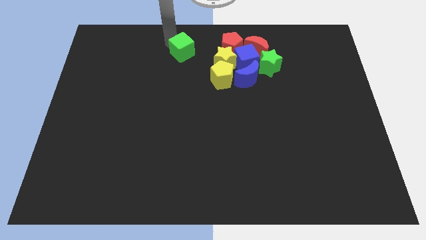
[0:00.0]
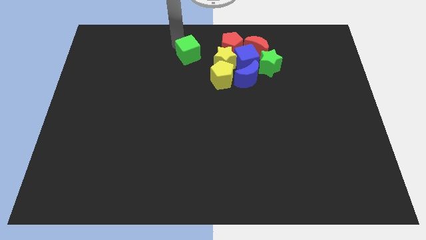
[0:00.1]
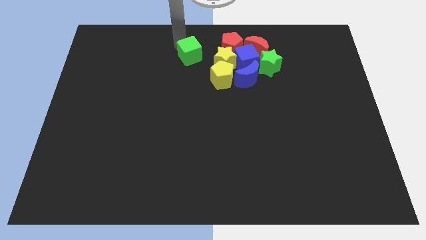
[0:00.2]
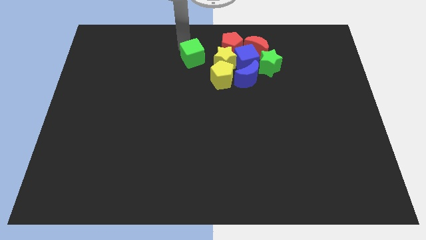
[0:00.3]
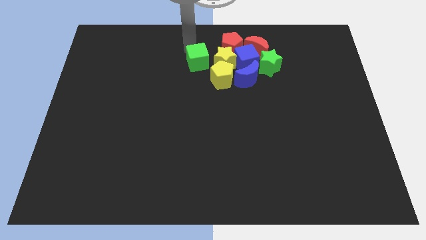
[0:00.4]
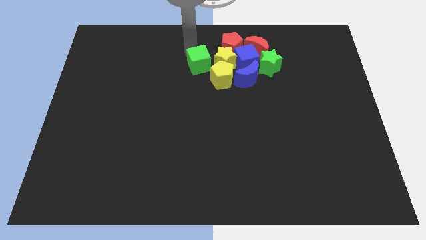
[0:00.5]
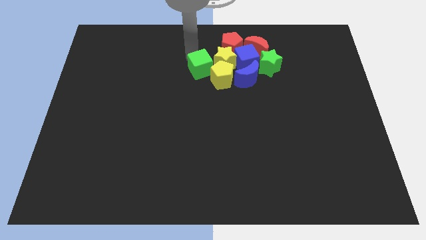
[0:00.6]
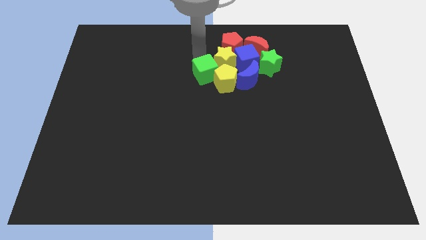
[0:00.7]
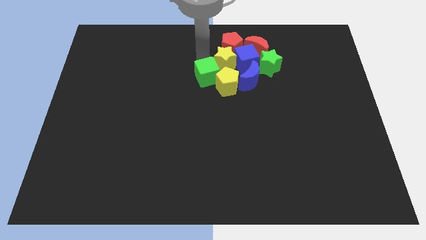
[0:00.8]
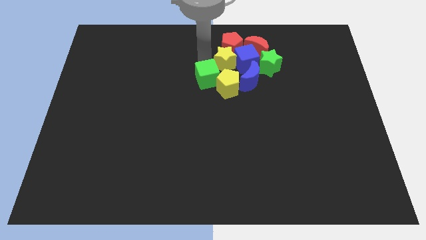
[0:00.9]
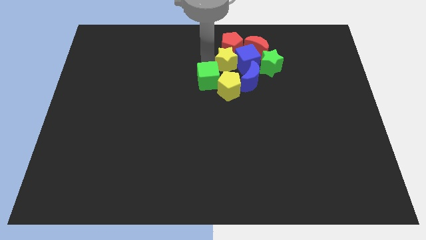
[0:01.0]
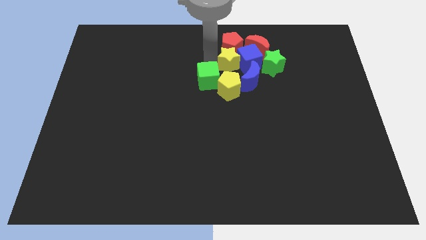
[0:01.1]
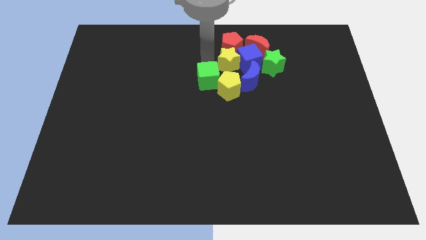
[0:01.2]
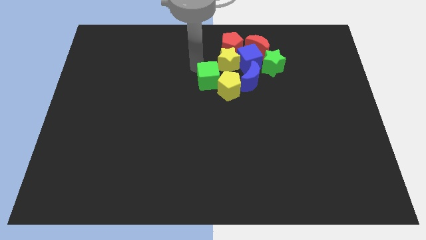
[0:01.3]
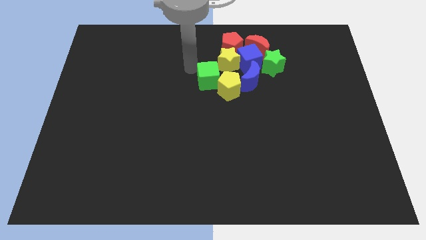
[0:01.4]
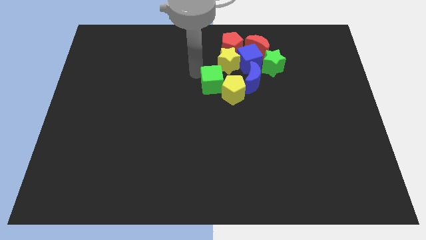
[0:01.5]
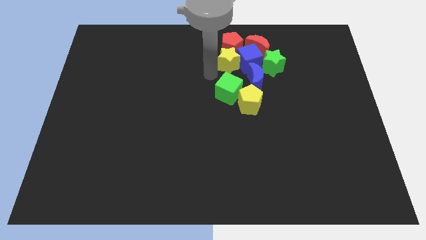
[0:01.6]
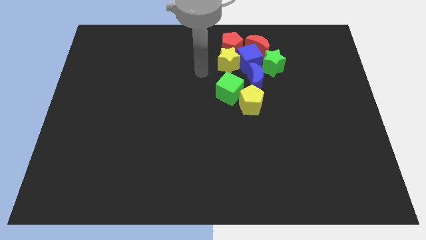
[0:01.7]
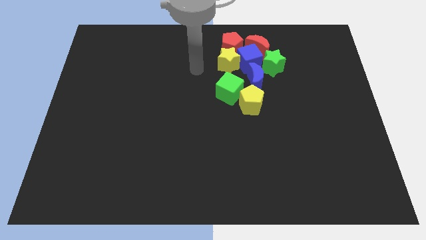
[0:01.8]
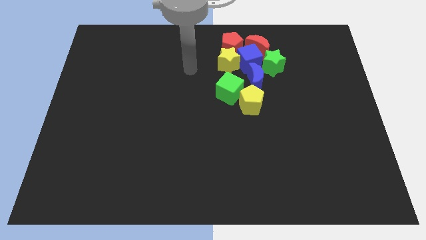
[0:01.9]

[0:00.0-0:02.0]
push the green cube close to the yellow pentagon

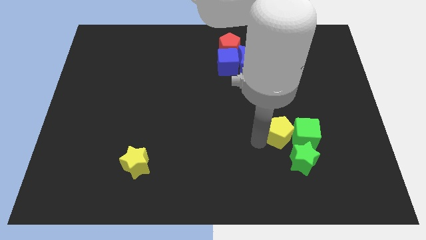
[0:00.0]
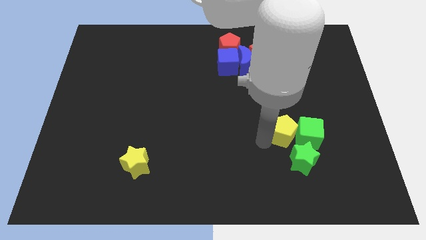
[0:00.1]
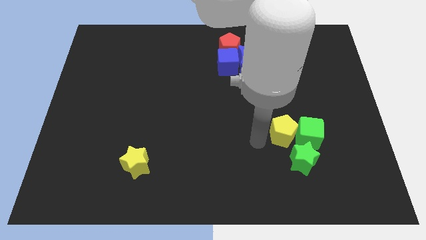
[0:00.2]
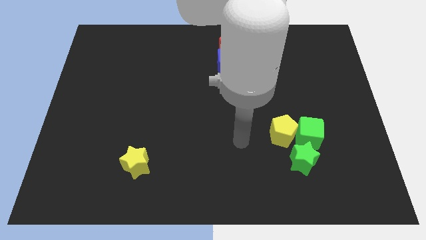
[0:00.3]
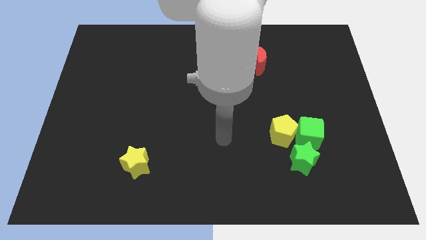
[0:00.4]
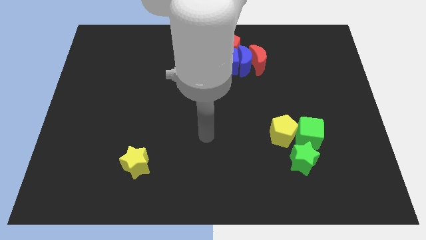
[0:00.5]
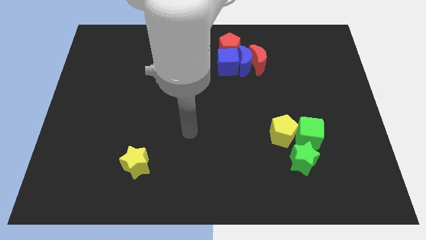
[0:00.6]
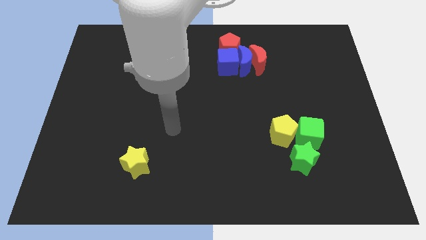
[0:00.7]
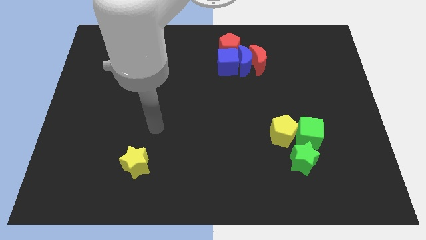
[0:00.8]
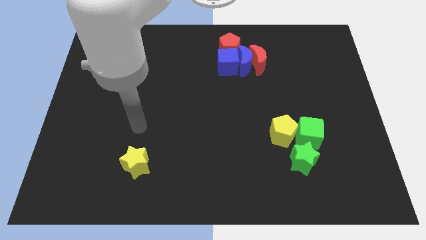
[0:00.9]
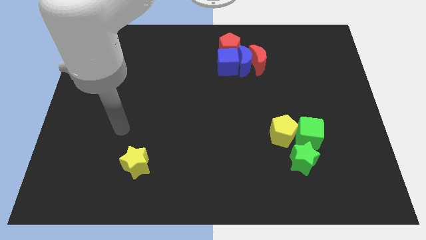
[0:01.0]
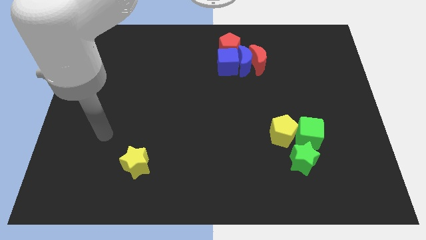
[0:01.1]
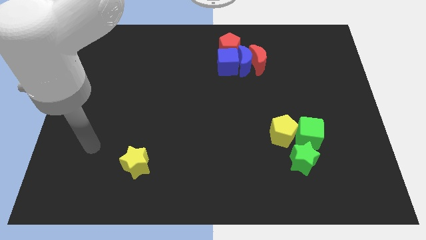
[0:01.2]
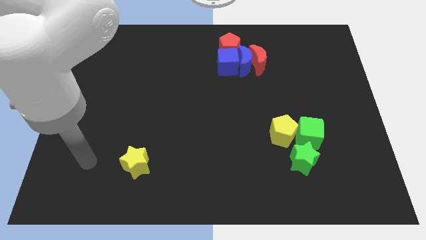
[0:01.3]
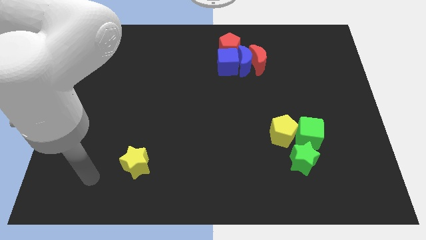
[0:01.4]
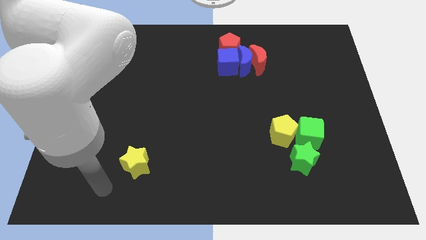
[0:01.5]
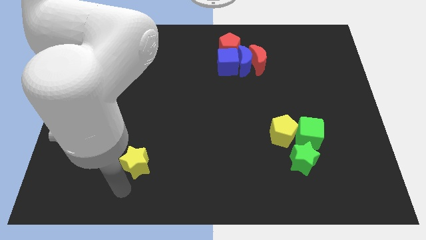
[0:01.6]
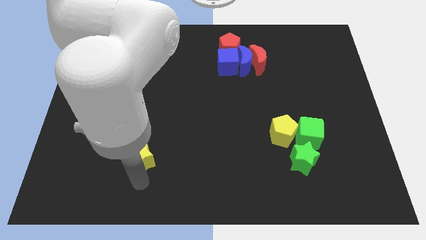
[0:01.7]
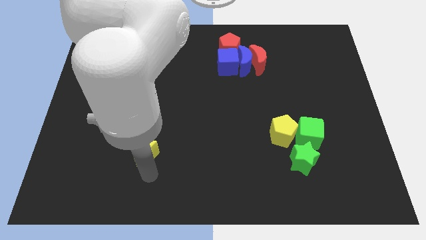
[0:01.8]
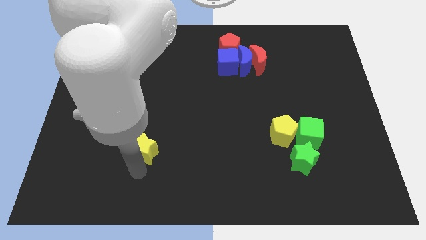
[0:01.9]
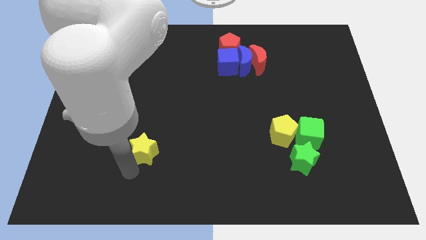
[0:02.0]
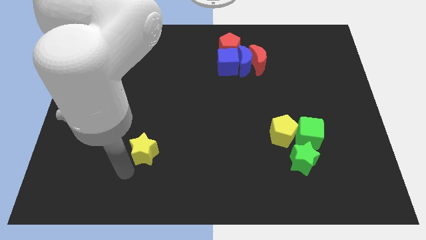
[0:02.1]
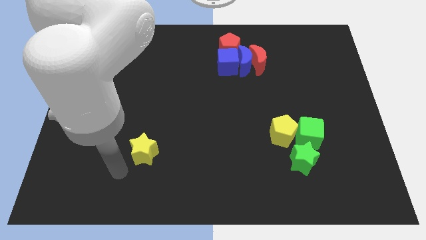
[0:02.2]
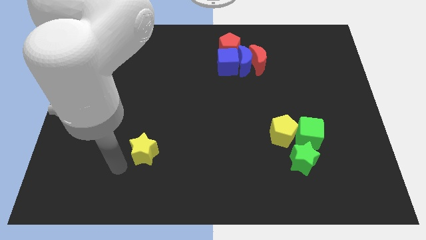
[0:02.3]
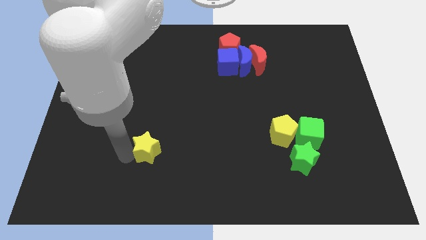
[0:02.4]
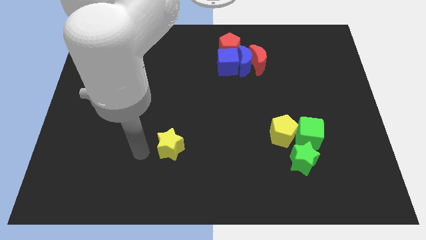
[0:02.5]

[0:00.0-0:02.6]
move your arm away from the yellow pentagon

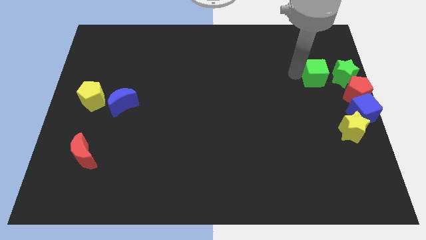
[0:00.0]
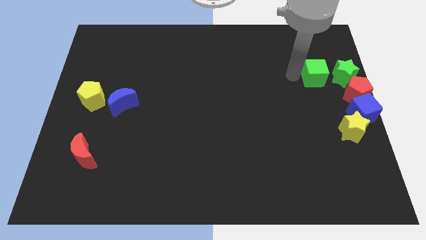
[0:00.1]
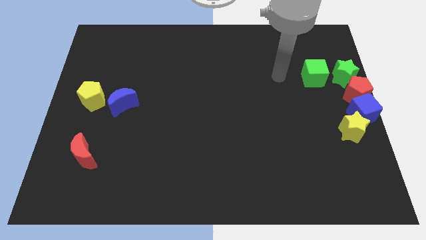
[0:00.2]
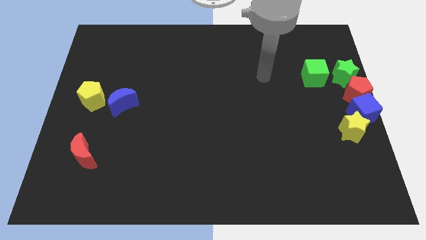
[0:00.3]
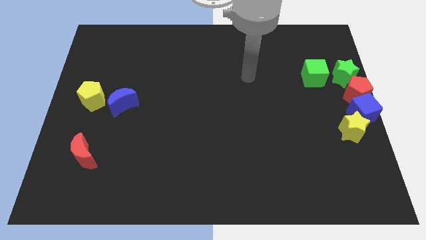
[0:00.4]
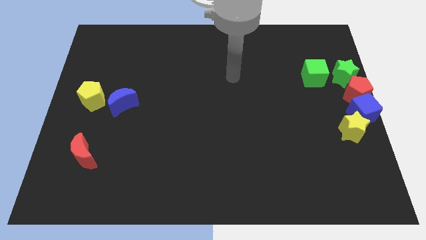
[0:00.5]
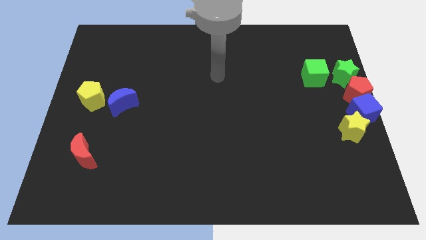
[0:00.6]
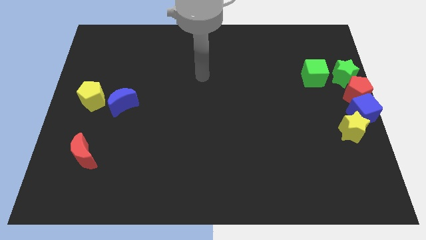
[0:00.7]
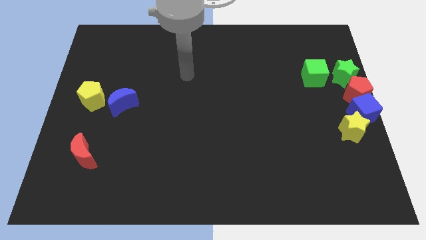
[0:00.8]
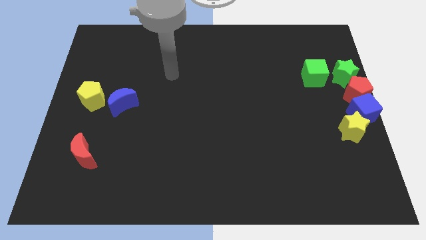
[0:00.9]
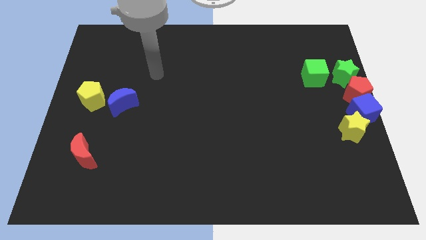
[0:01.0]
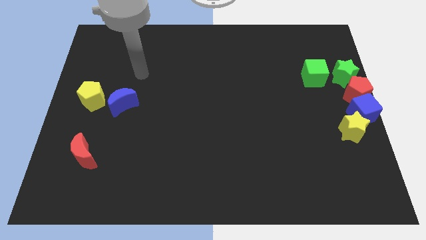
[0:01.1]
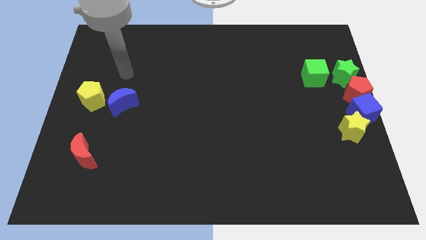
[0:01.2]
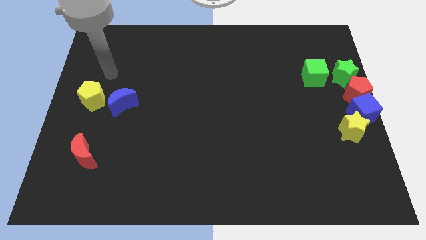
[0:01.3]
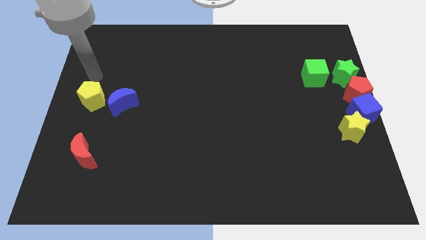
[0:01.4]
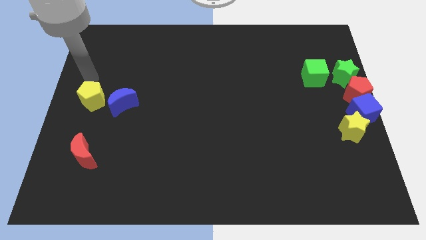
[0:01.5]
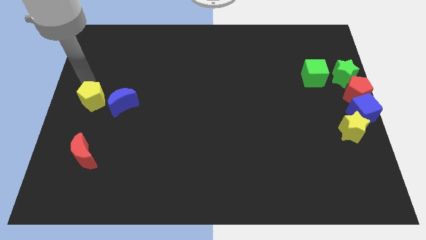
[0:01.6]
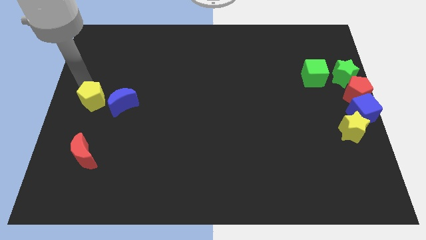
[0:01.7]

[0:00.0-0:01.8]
move your arm on top of the yellow pentagon

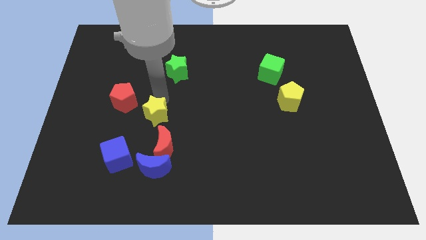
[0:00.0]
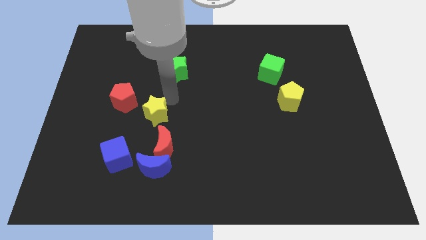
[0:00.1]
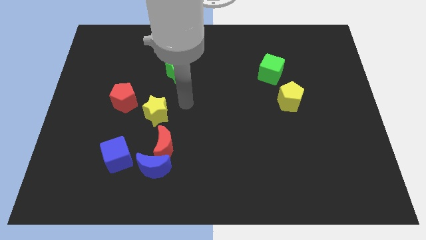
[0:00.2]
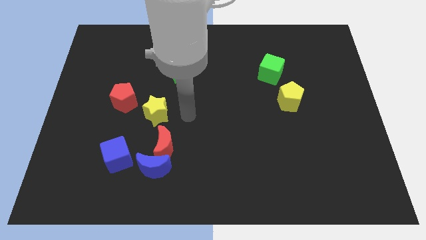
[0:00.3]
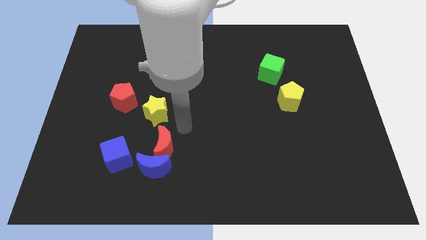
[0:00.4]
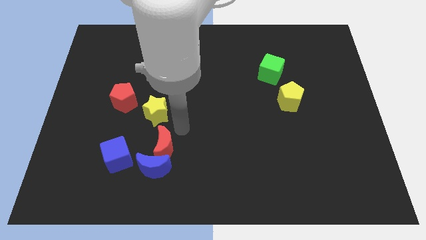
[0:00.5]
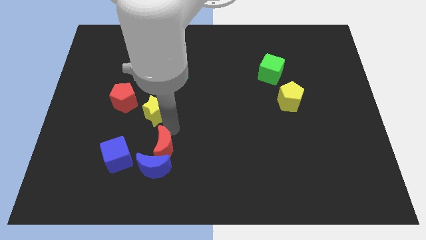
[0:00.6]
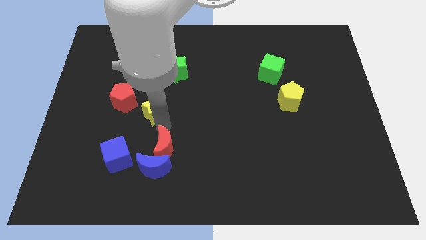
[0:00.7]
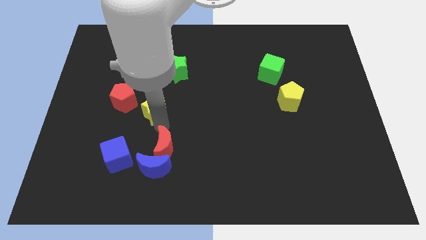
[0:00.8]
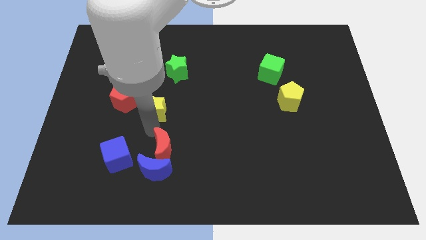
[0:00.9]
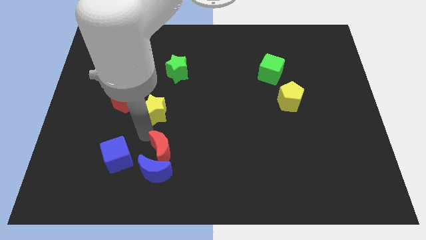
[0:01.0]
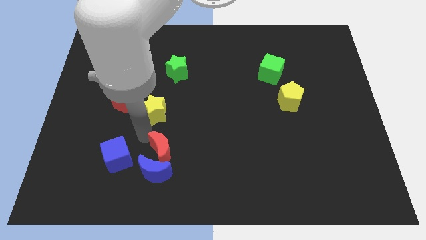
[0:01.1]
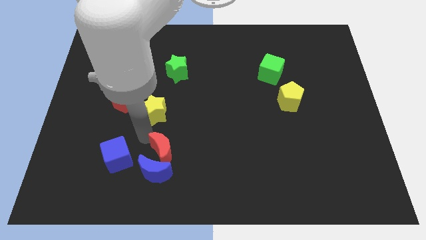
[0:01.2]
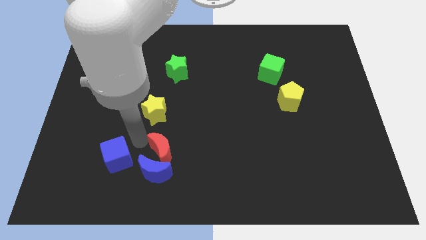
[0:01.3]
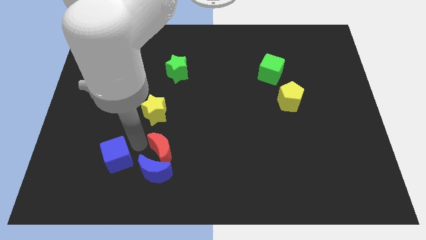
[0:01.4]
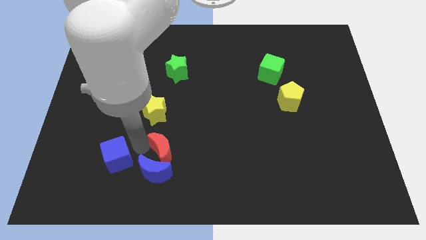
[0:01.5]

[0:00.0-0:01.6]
place your arm in between the blue cube and the red moon

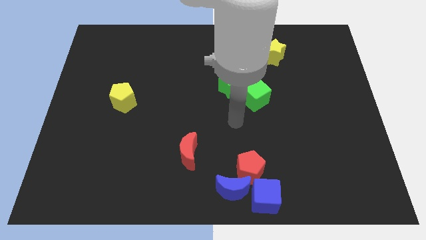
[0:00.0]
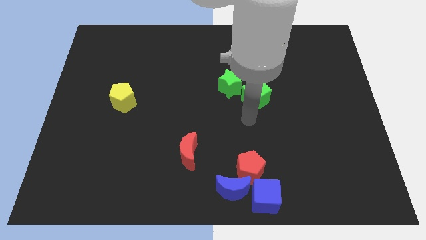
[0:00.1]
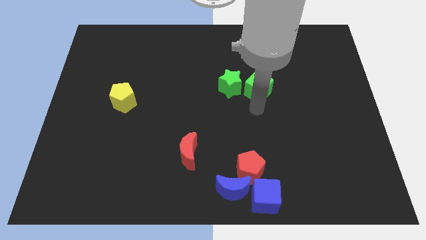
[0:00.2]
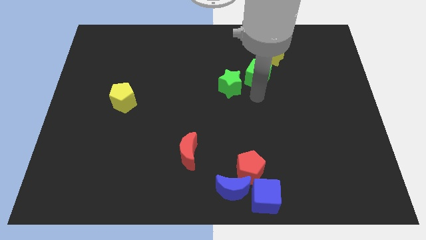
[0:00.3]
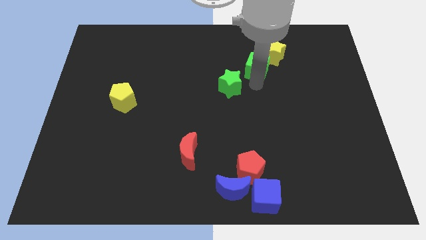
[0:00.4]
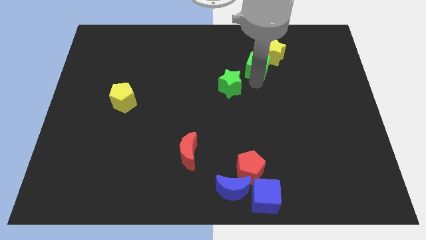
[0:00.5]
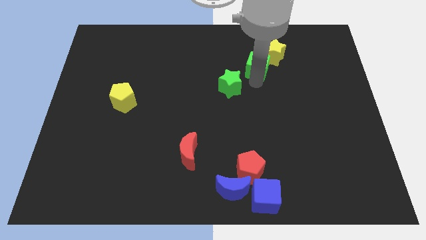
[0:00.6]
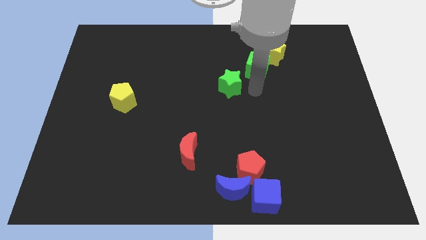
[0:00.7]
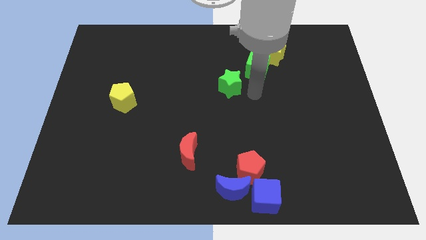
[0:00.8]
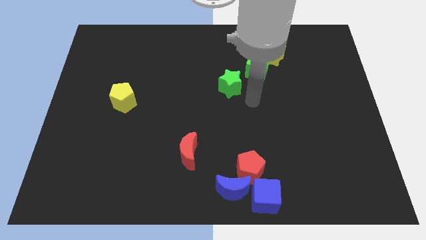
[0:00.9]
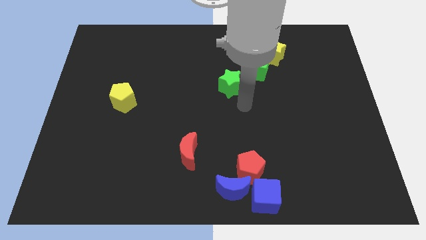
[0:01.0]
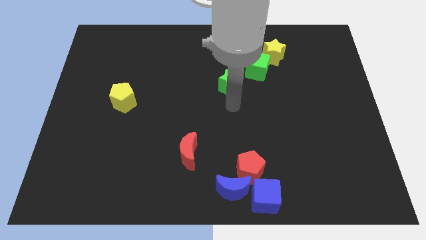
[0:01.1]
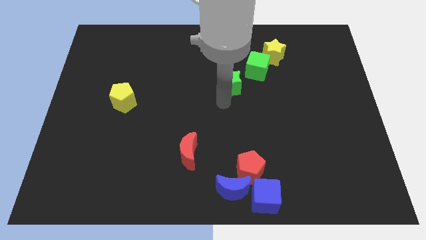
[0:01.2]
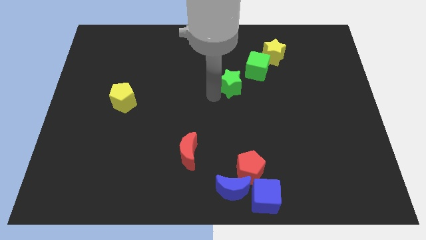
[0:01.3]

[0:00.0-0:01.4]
push the green cube into the yellow star
